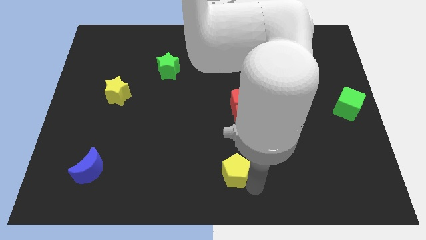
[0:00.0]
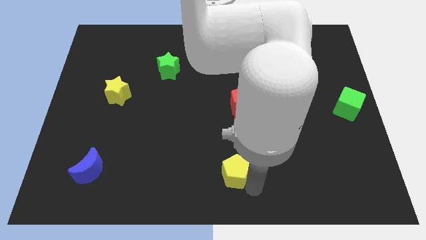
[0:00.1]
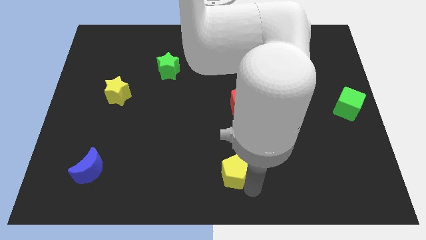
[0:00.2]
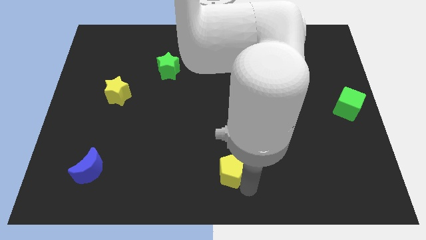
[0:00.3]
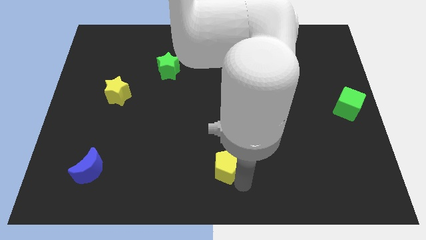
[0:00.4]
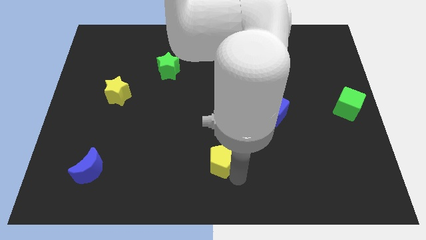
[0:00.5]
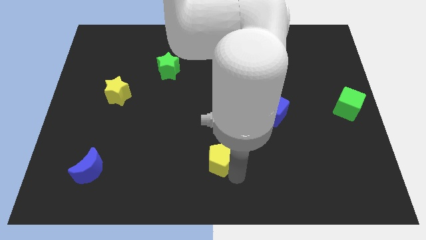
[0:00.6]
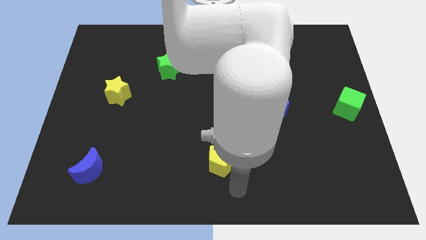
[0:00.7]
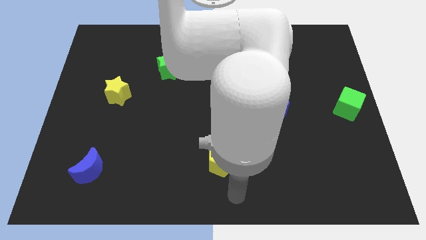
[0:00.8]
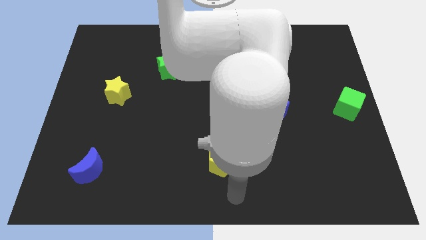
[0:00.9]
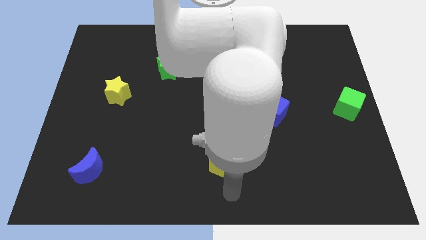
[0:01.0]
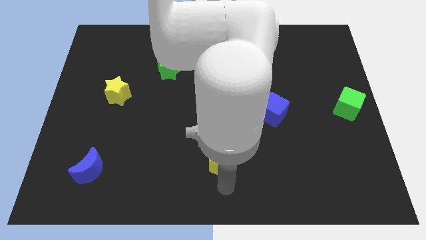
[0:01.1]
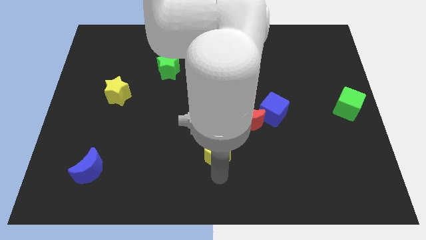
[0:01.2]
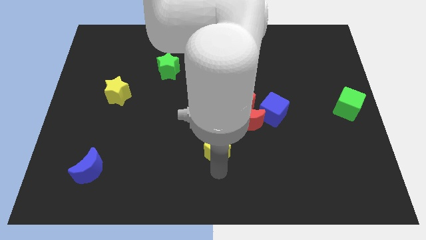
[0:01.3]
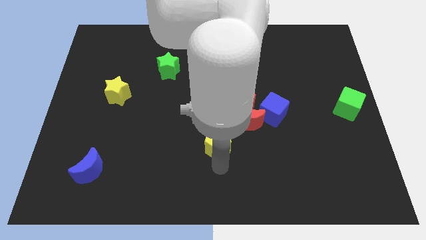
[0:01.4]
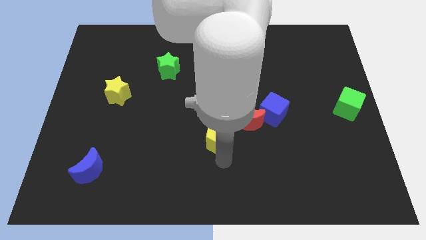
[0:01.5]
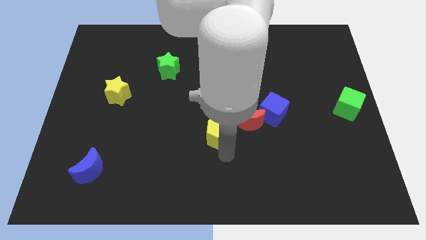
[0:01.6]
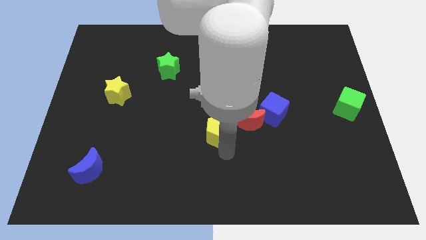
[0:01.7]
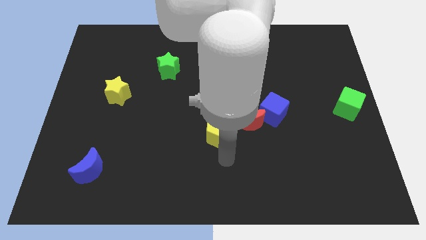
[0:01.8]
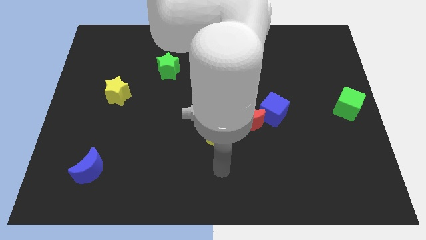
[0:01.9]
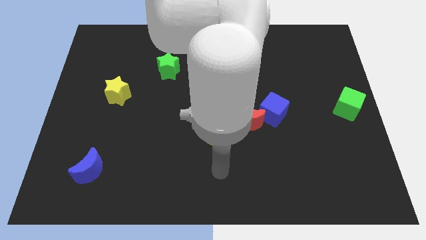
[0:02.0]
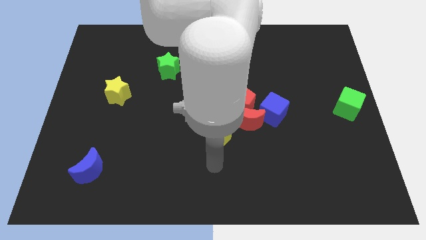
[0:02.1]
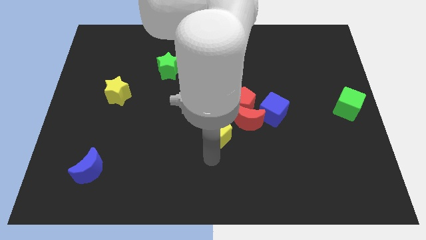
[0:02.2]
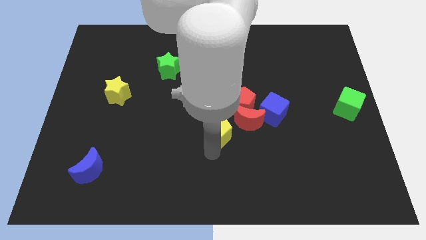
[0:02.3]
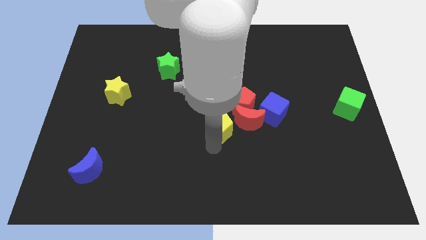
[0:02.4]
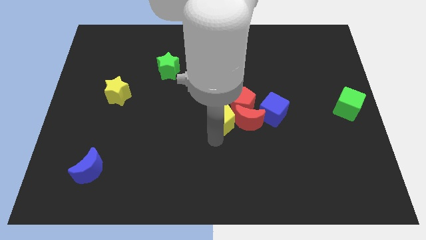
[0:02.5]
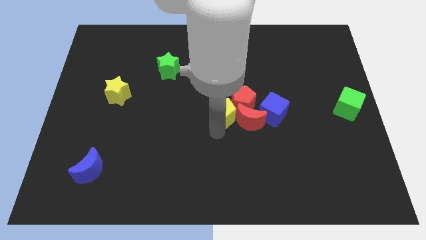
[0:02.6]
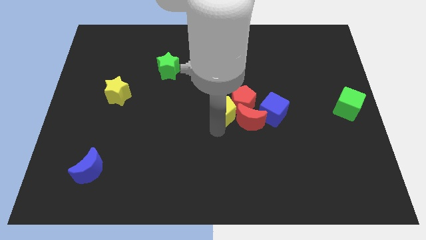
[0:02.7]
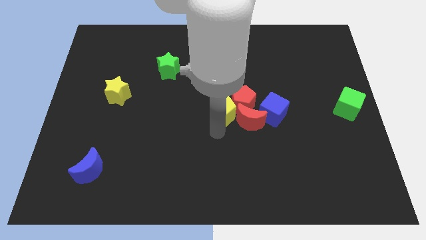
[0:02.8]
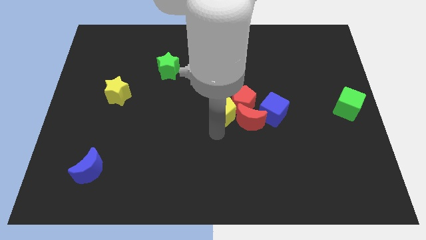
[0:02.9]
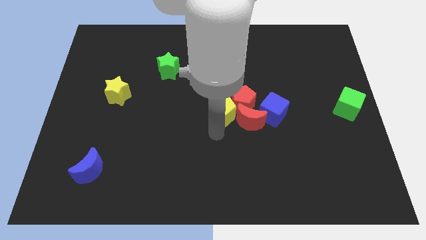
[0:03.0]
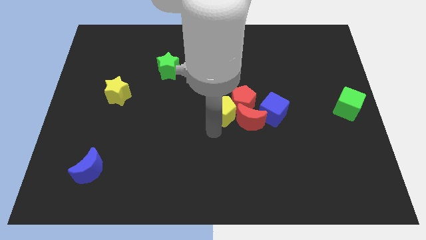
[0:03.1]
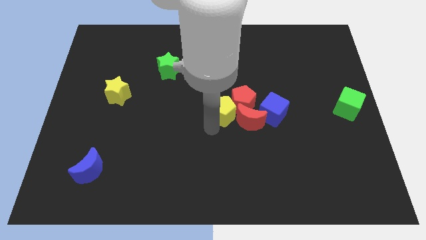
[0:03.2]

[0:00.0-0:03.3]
move the bottom center yellow pentagon to the center of board

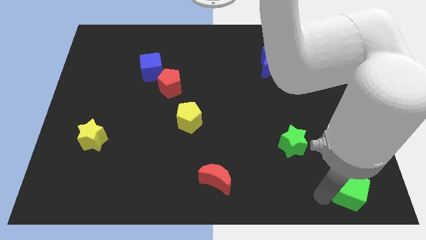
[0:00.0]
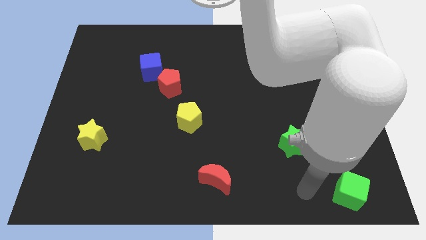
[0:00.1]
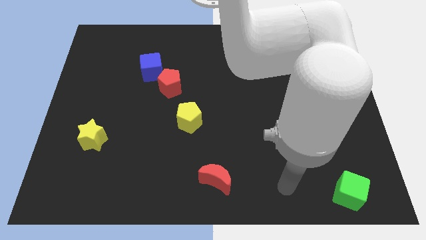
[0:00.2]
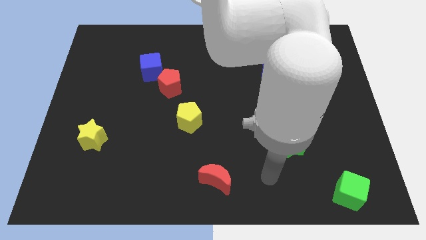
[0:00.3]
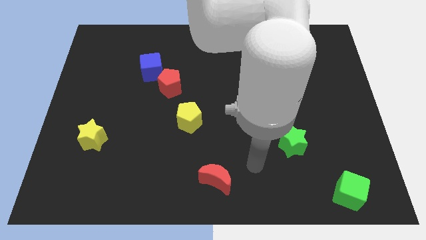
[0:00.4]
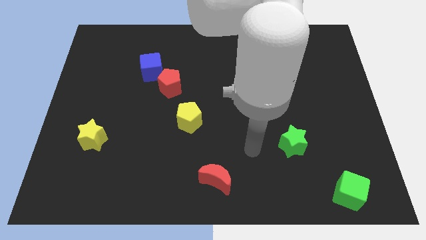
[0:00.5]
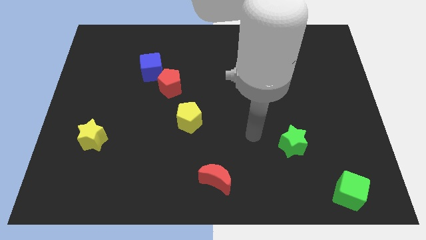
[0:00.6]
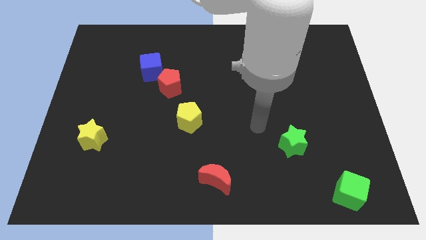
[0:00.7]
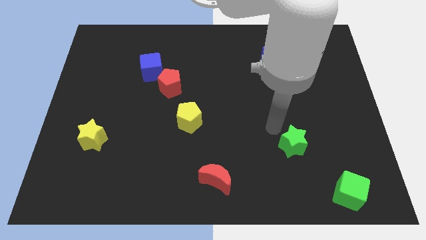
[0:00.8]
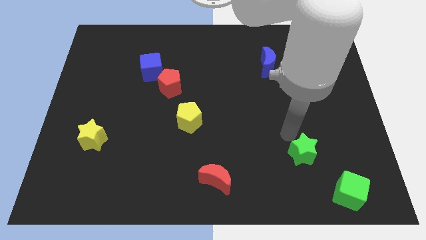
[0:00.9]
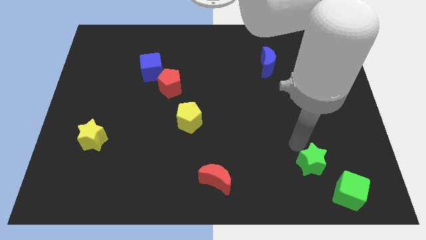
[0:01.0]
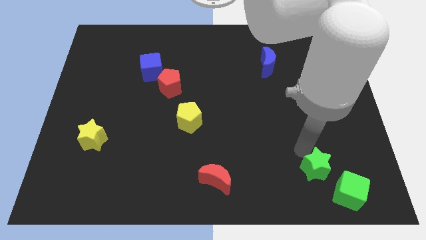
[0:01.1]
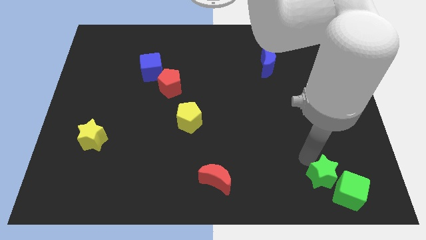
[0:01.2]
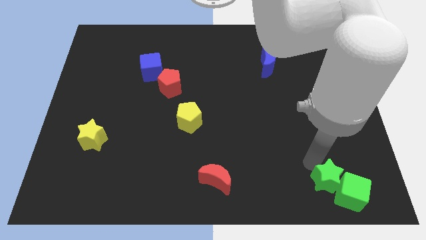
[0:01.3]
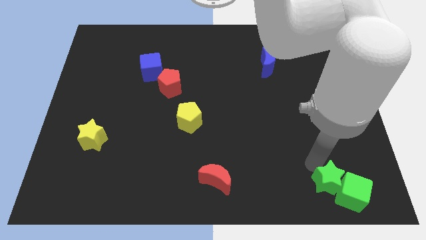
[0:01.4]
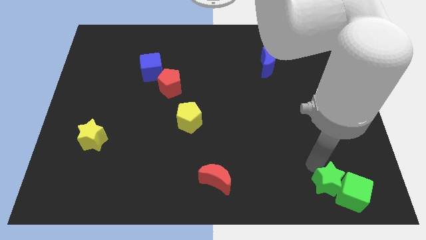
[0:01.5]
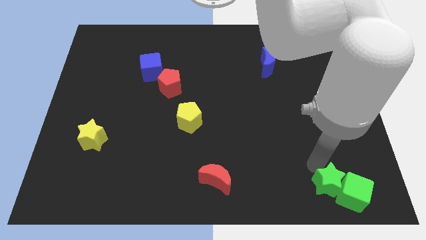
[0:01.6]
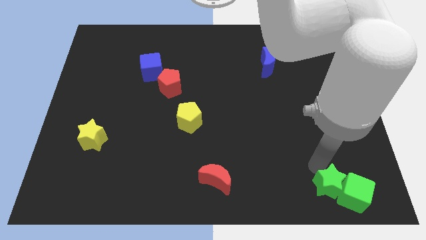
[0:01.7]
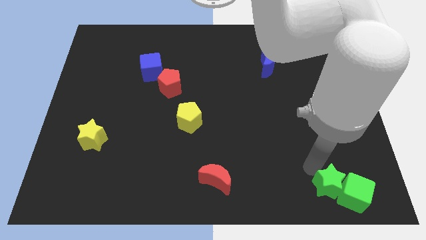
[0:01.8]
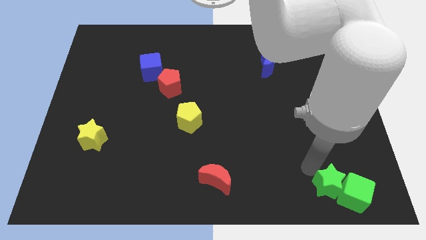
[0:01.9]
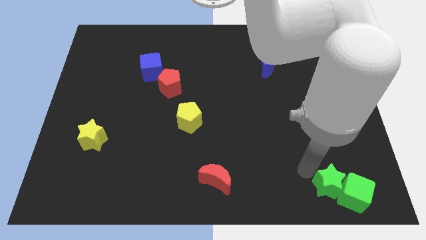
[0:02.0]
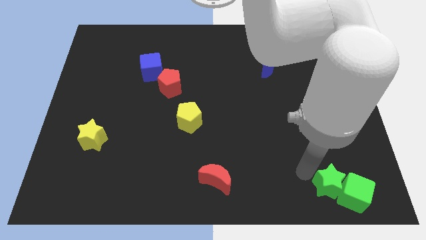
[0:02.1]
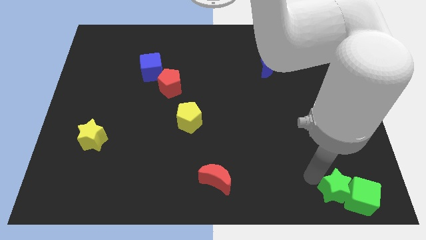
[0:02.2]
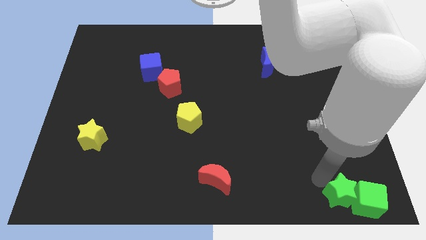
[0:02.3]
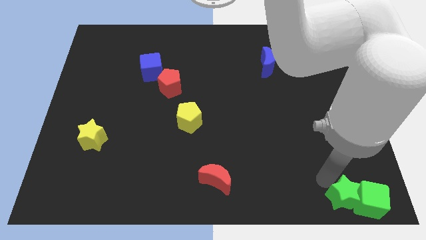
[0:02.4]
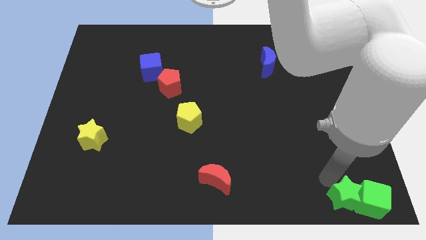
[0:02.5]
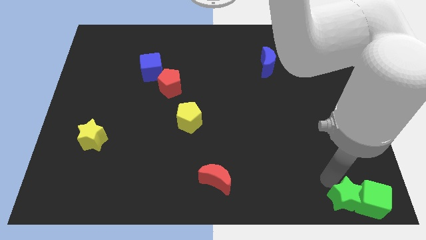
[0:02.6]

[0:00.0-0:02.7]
push the green star into the green cube

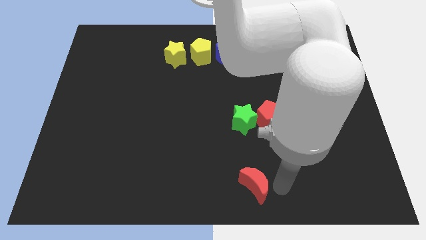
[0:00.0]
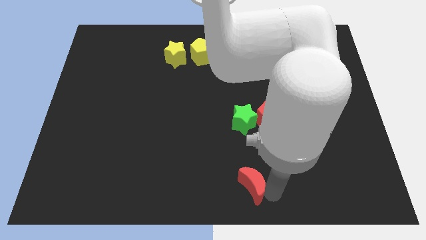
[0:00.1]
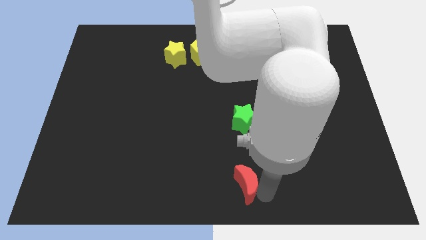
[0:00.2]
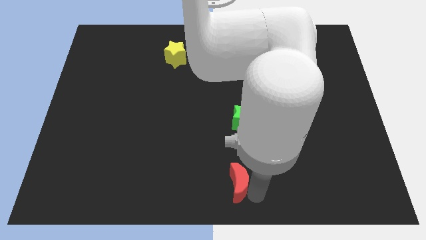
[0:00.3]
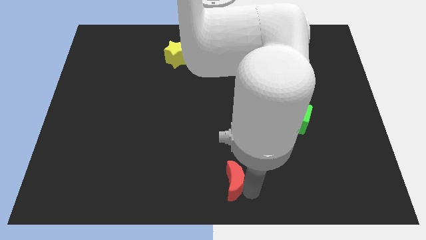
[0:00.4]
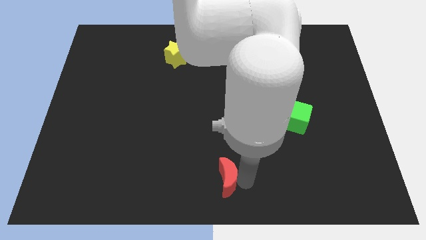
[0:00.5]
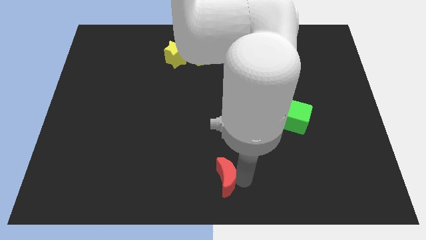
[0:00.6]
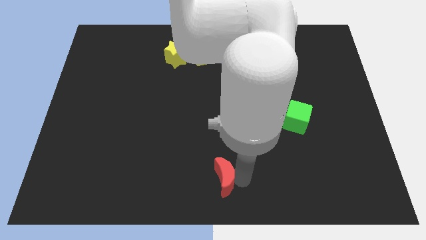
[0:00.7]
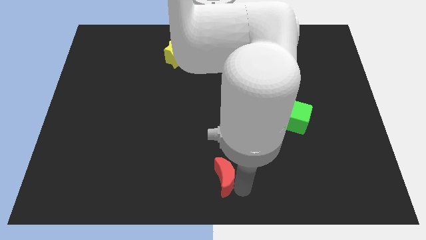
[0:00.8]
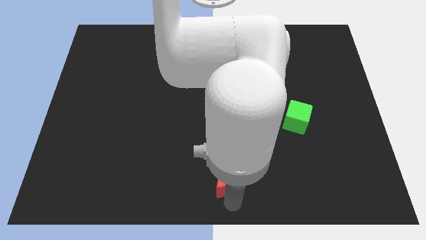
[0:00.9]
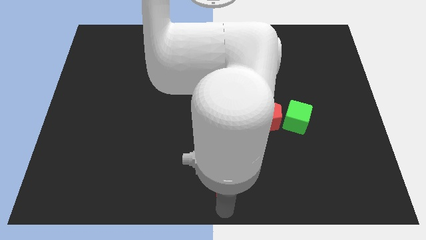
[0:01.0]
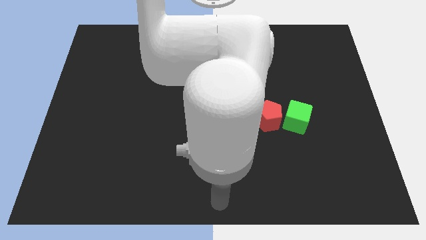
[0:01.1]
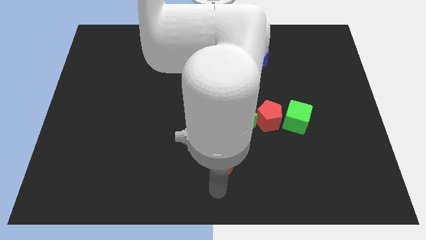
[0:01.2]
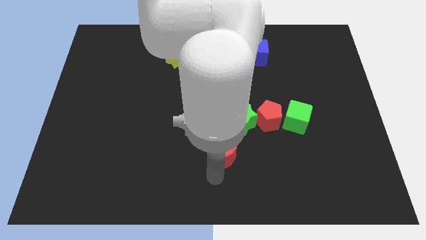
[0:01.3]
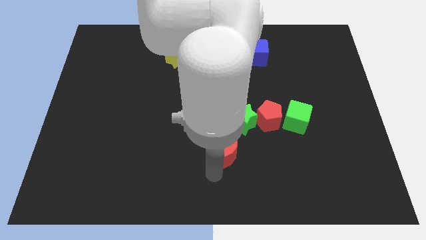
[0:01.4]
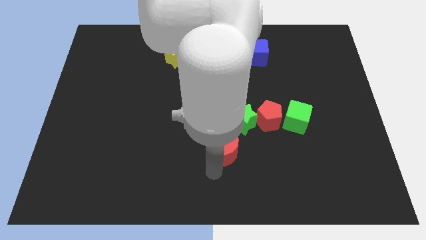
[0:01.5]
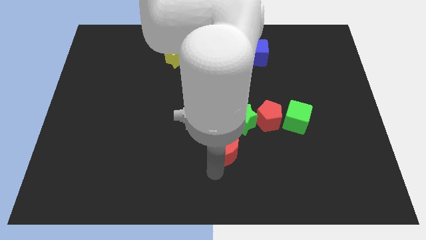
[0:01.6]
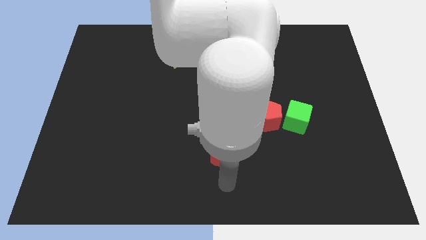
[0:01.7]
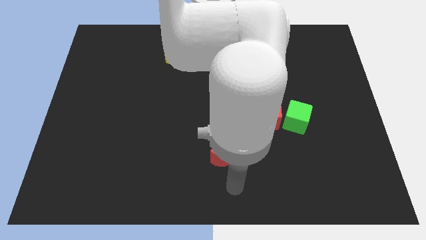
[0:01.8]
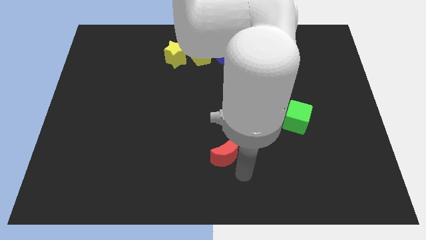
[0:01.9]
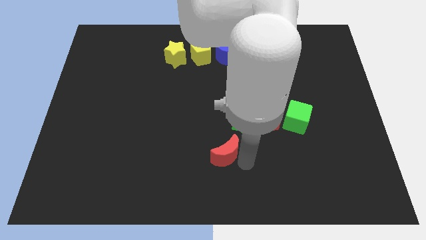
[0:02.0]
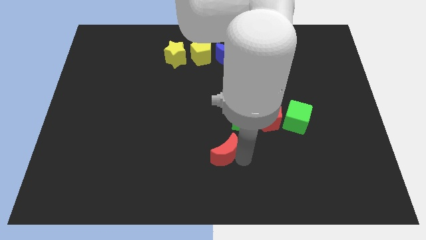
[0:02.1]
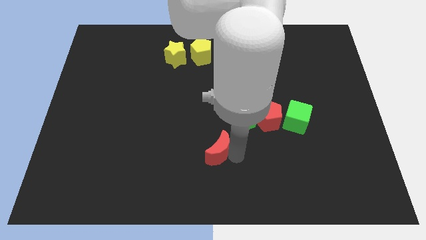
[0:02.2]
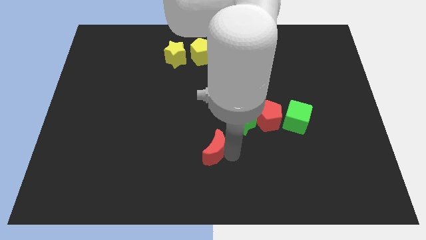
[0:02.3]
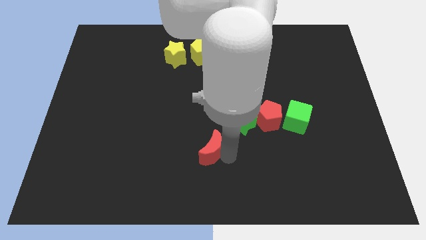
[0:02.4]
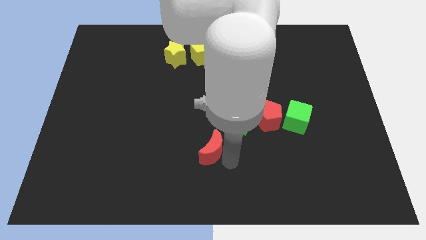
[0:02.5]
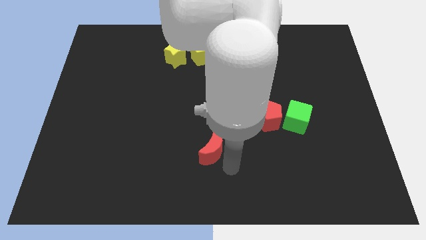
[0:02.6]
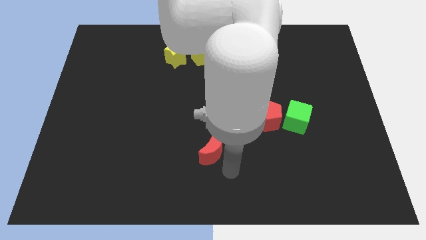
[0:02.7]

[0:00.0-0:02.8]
place the red crescent bottom left of green star

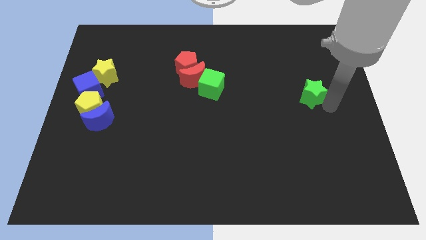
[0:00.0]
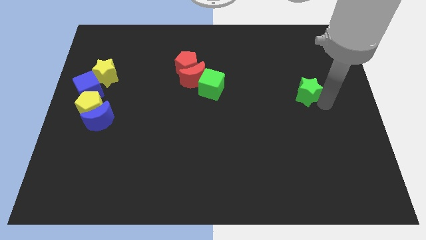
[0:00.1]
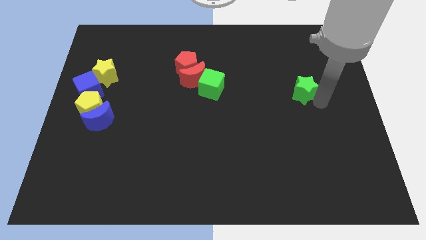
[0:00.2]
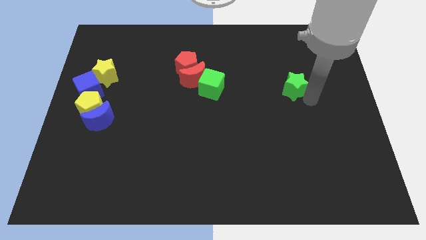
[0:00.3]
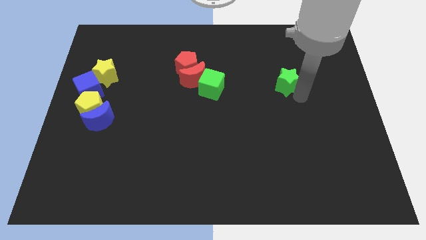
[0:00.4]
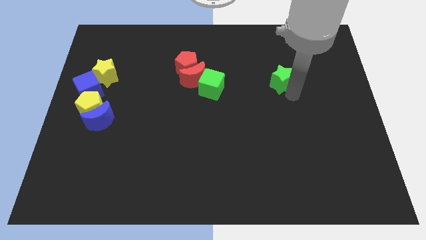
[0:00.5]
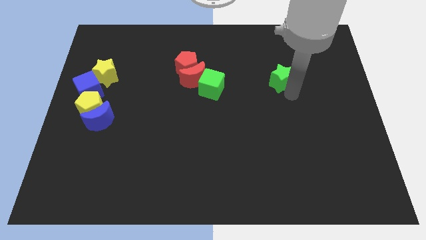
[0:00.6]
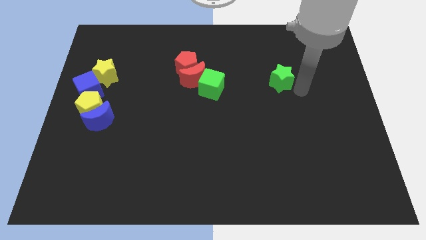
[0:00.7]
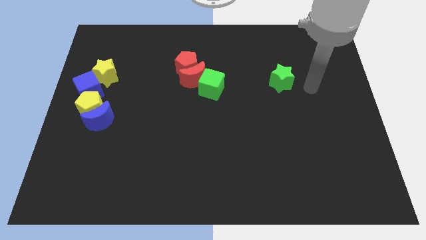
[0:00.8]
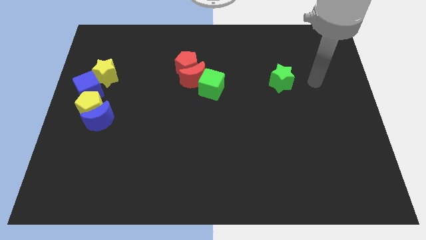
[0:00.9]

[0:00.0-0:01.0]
move the green star right to the green cube
